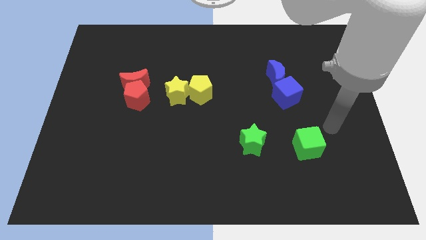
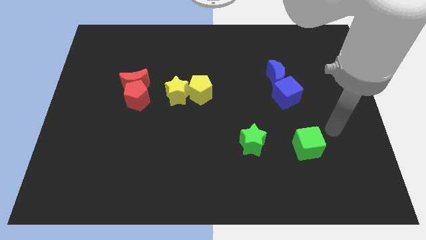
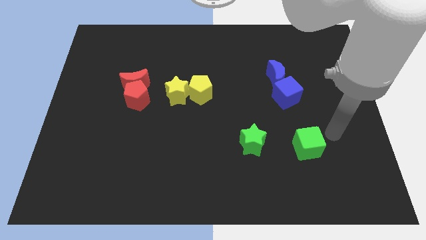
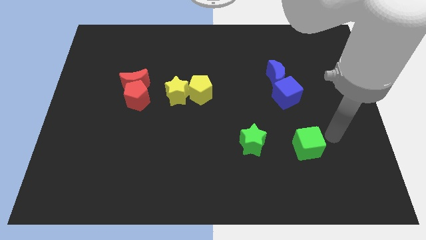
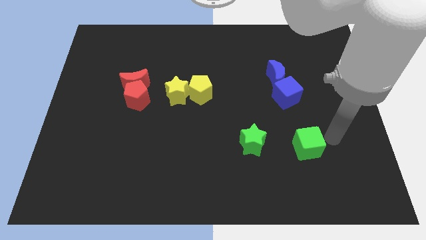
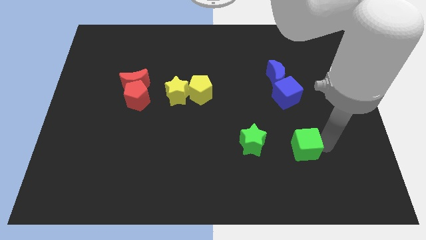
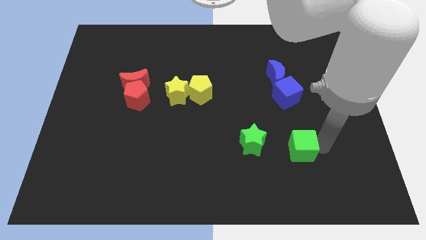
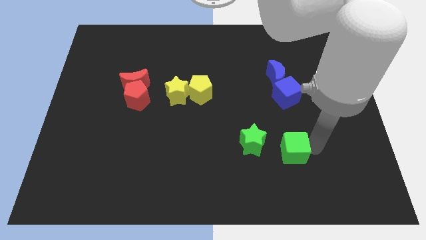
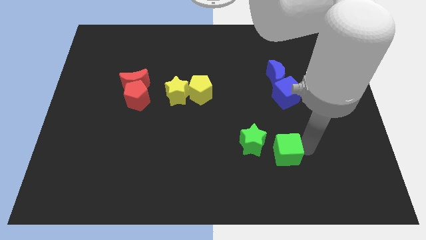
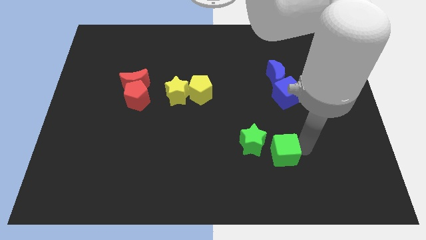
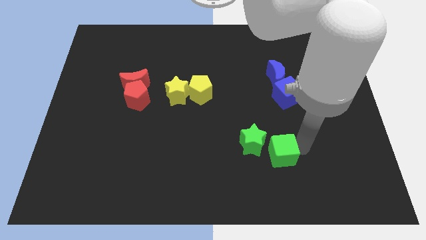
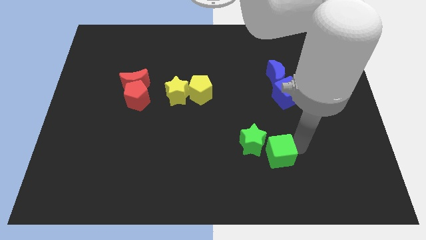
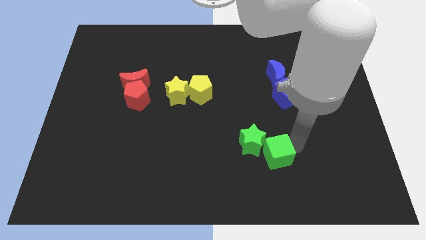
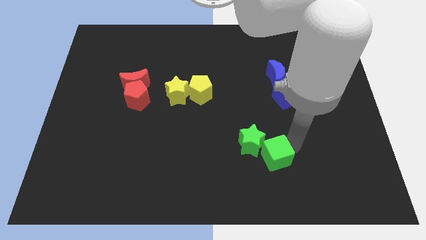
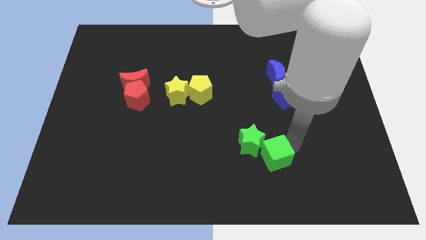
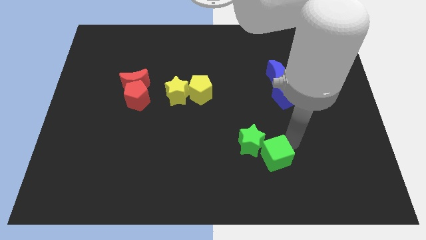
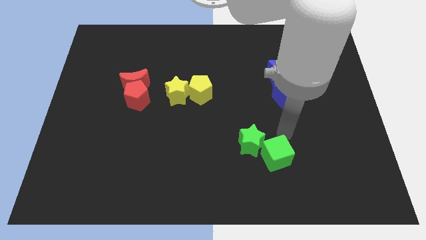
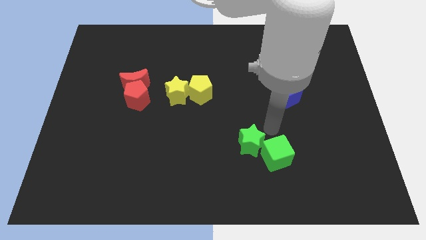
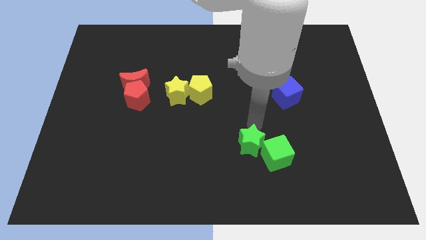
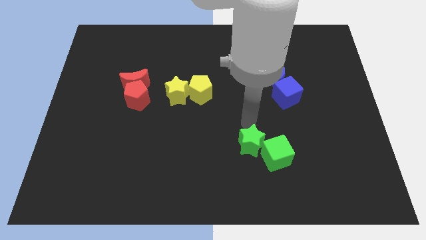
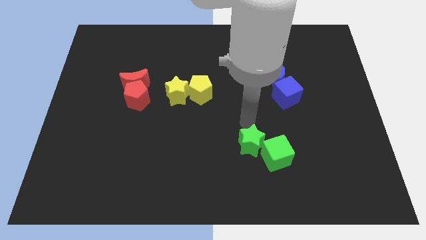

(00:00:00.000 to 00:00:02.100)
push green cube close to green star

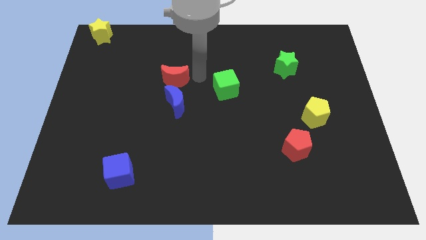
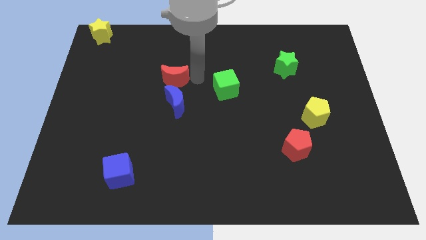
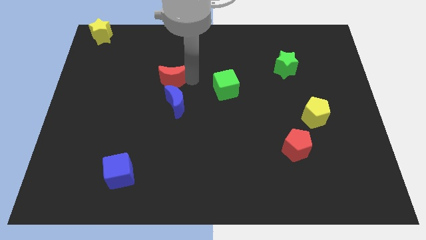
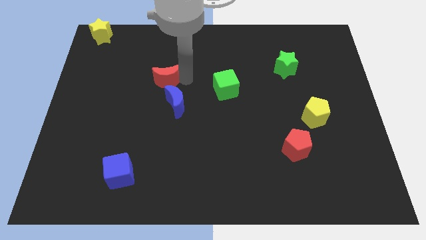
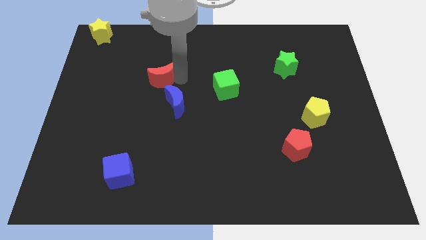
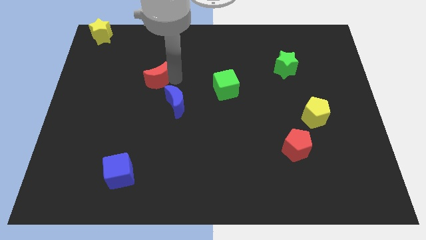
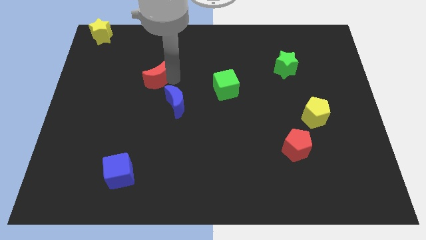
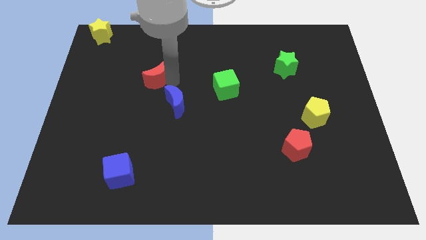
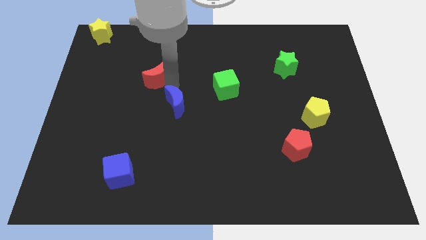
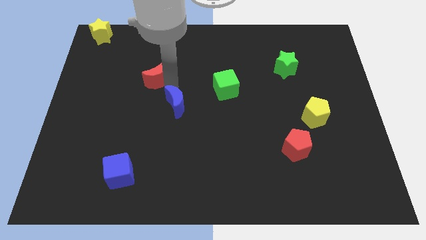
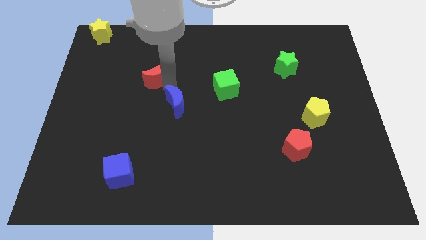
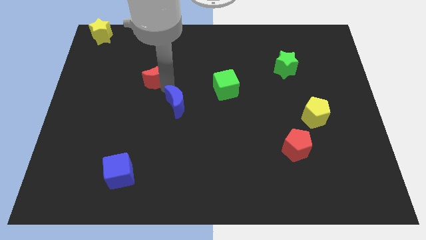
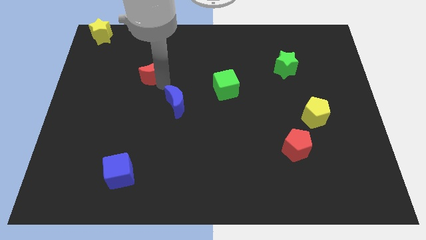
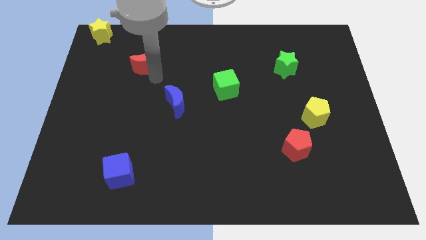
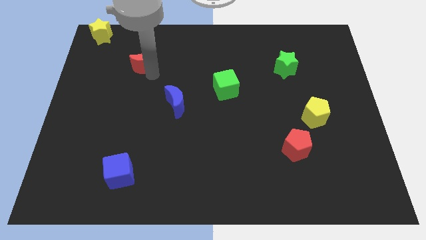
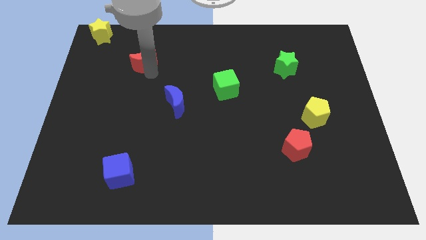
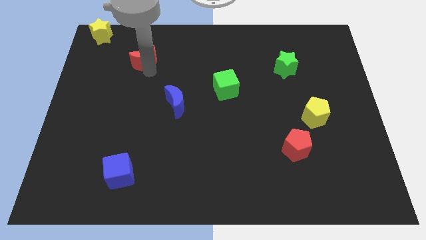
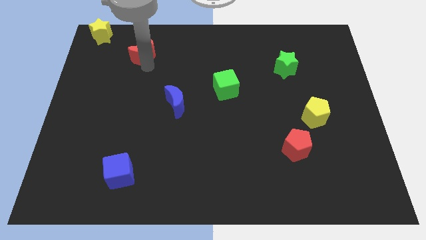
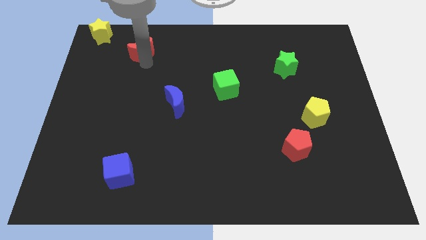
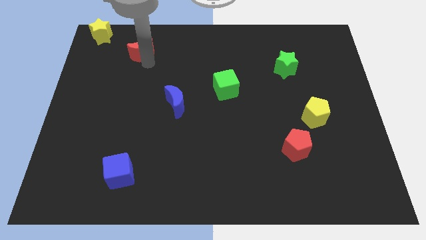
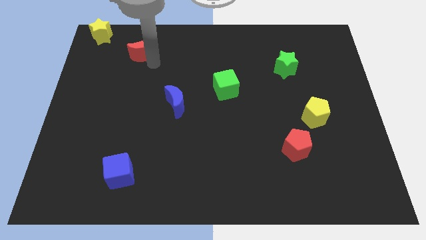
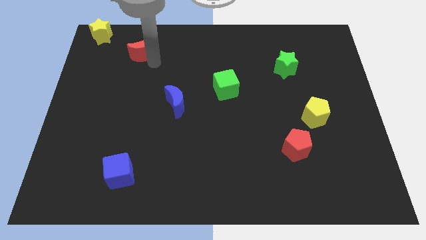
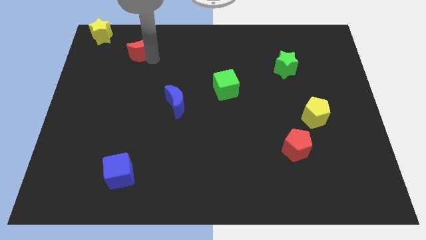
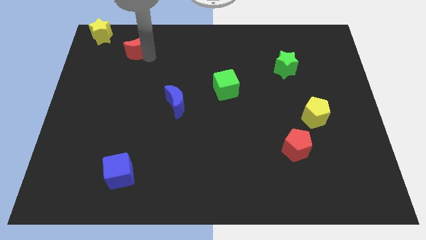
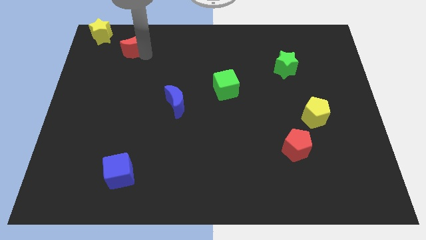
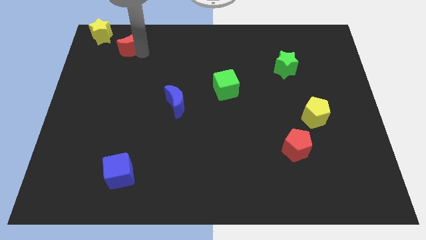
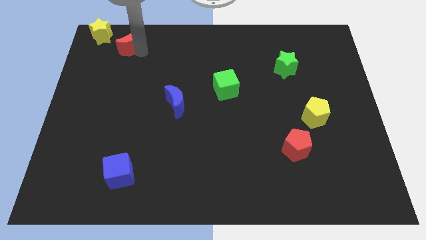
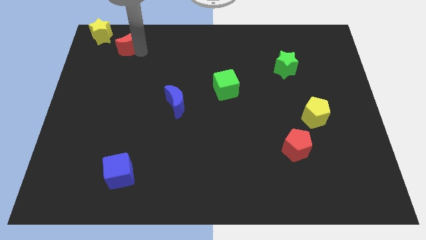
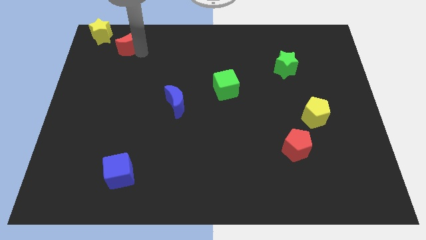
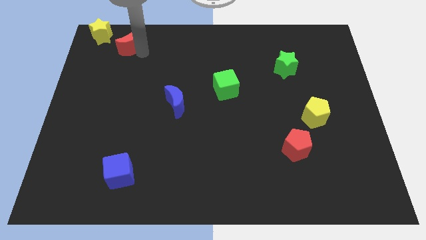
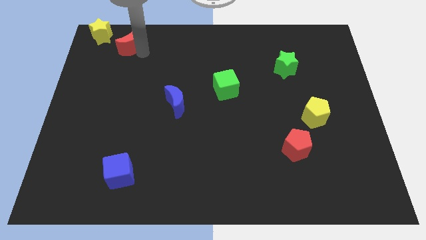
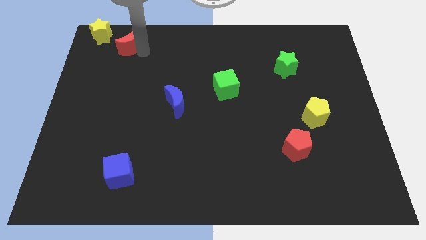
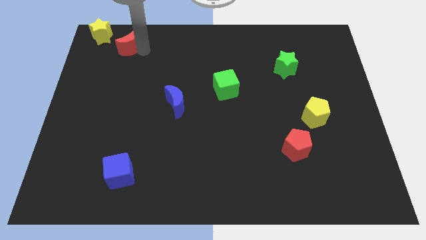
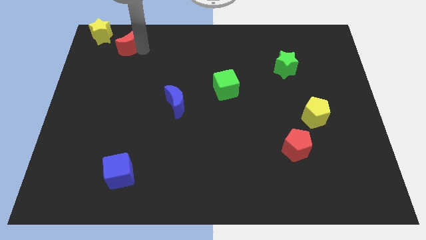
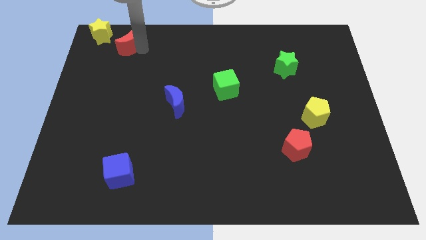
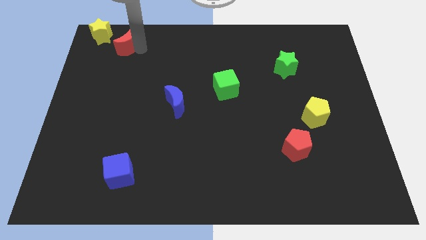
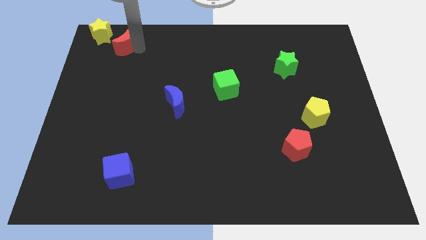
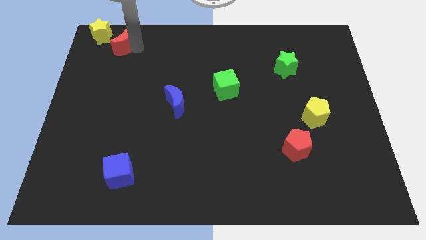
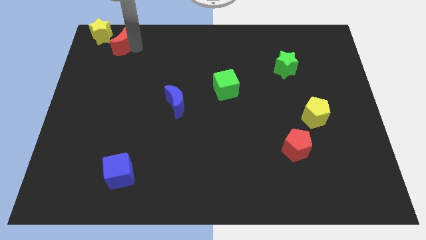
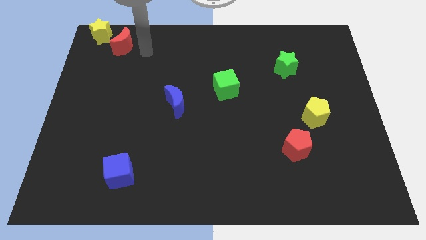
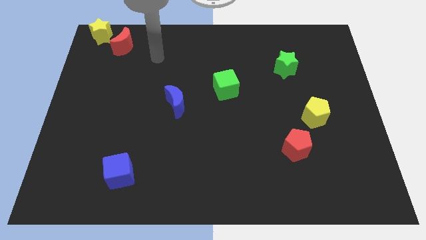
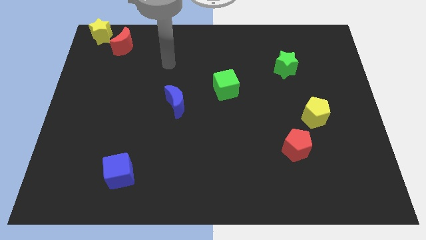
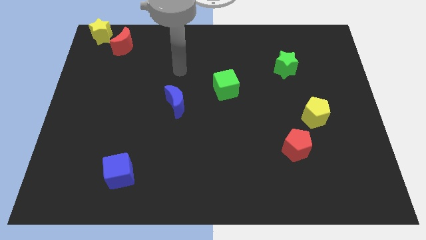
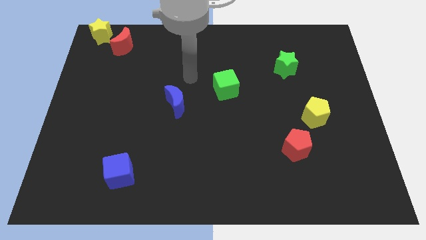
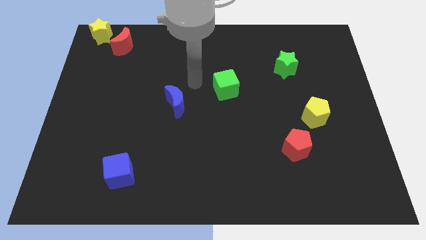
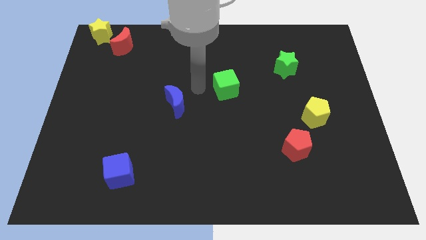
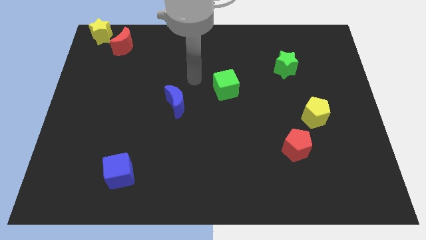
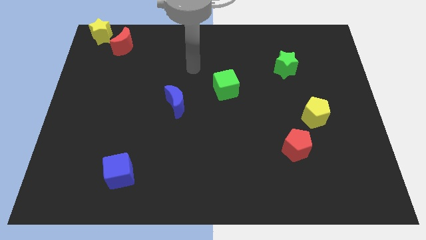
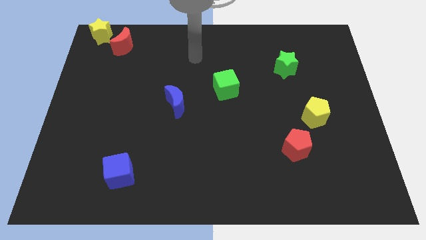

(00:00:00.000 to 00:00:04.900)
place the red crescent near the yellow star

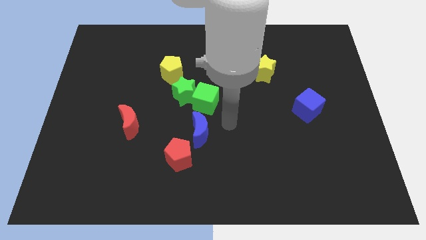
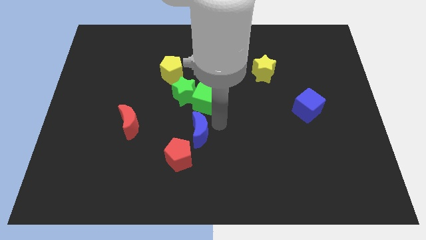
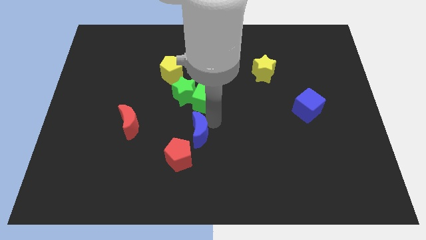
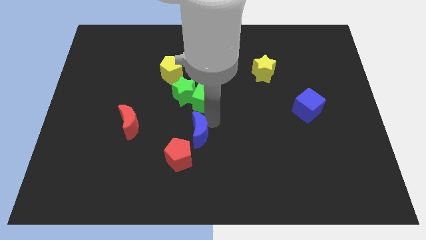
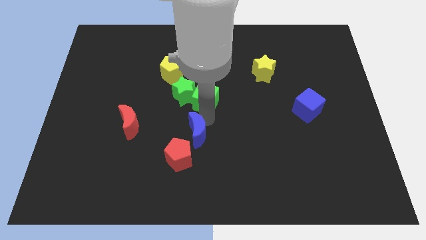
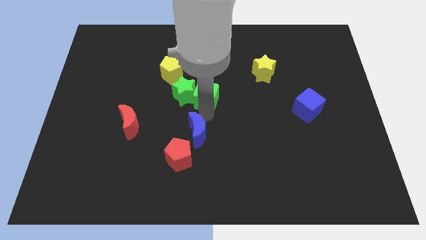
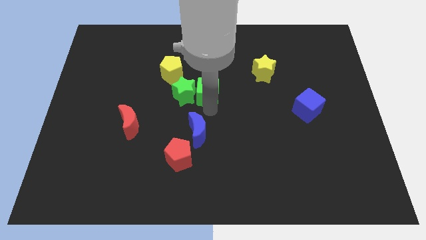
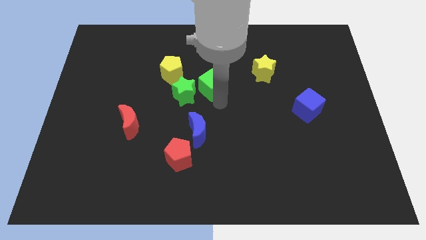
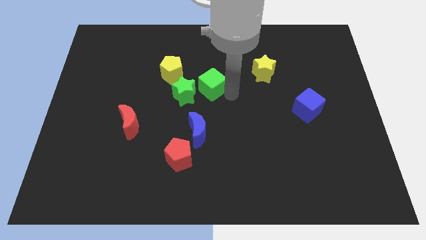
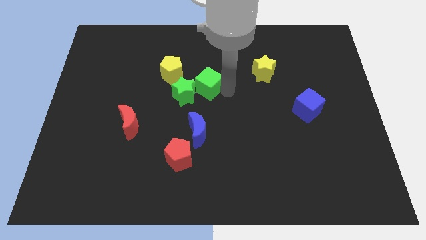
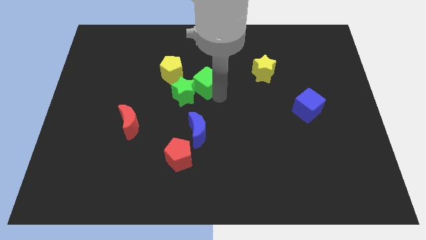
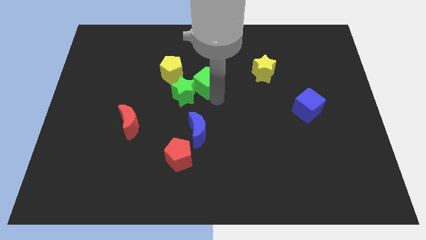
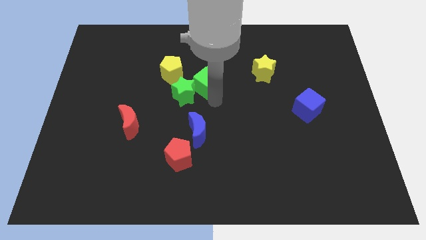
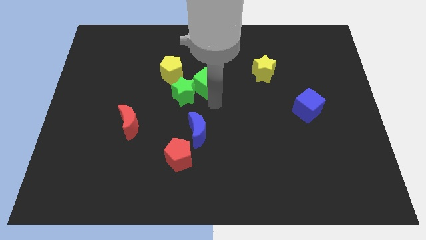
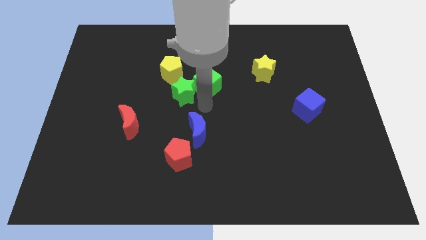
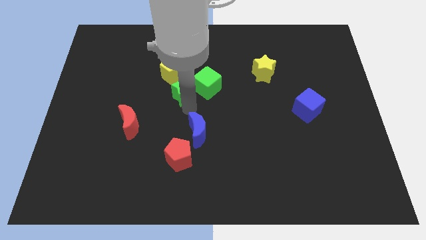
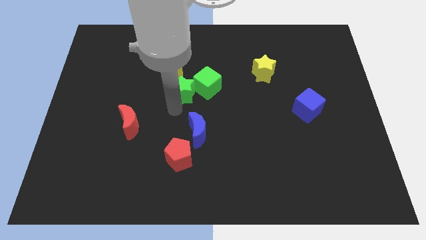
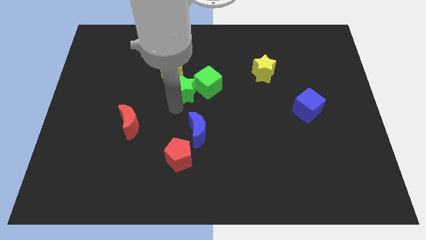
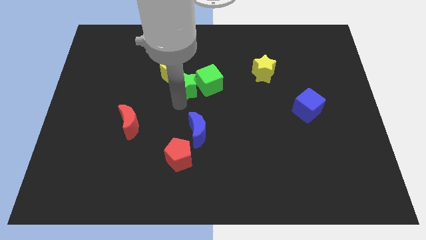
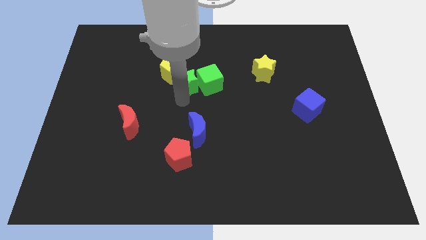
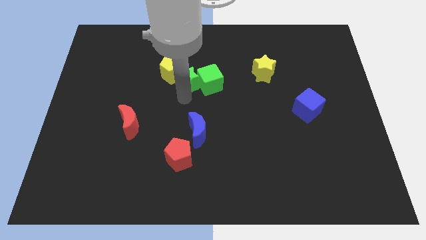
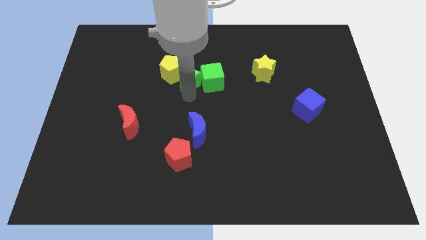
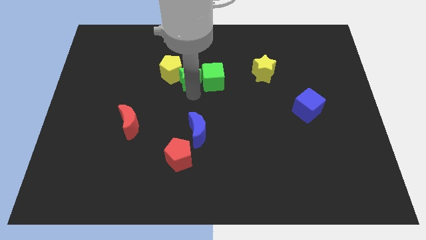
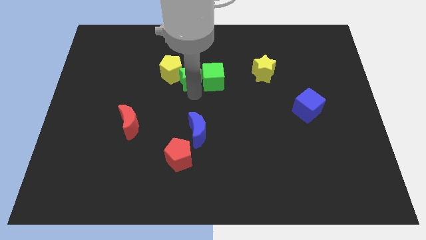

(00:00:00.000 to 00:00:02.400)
move green cube and green star towards the right of the yellow pentagon
